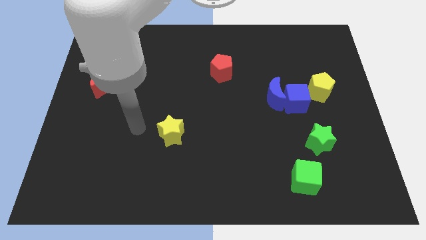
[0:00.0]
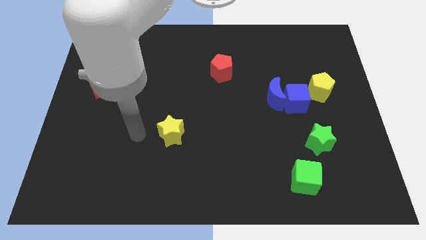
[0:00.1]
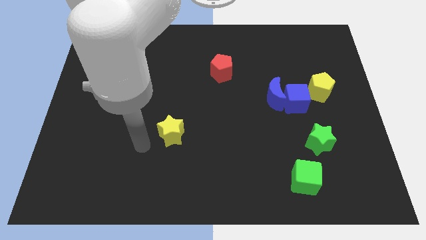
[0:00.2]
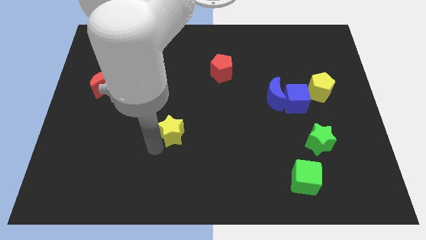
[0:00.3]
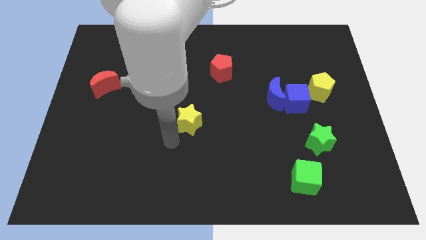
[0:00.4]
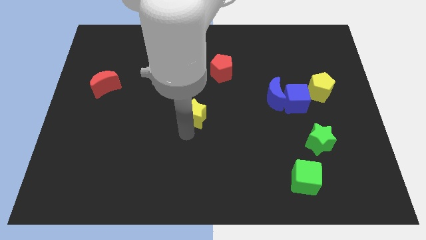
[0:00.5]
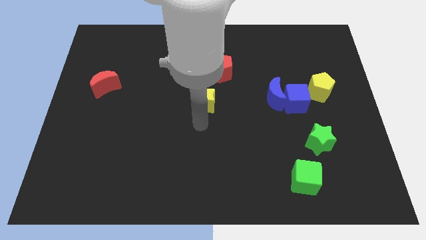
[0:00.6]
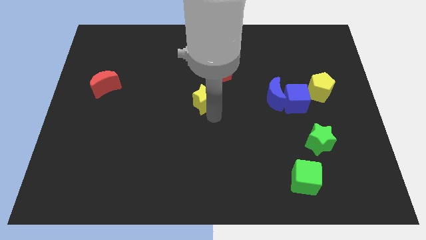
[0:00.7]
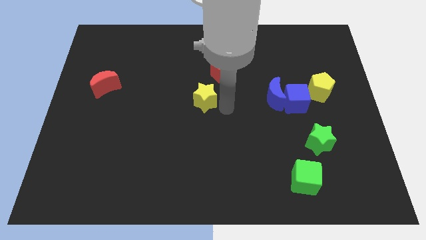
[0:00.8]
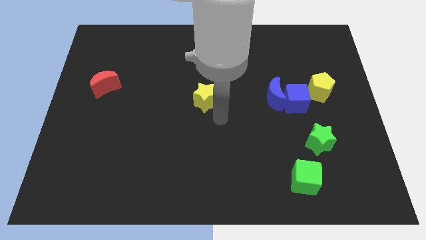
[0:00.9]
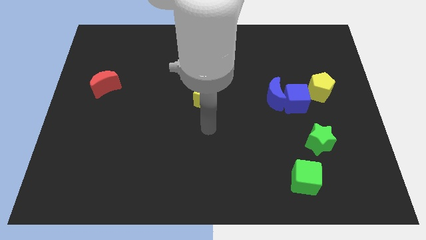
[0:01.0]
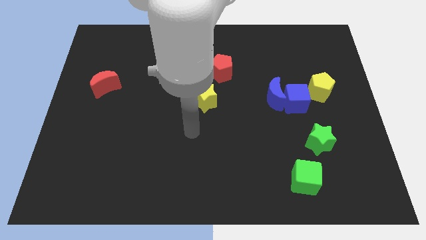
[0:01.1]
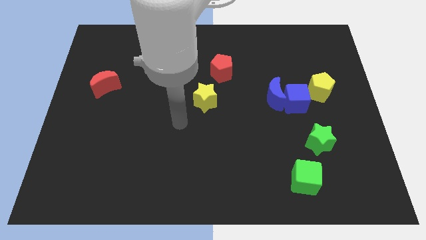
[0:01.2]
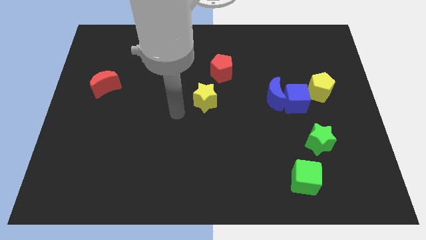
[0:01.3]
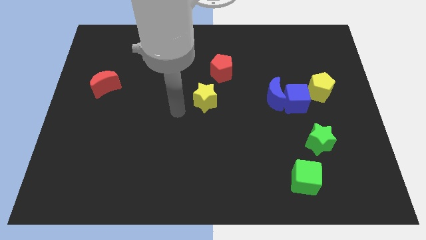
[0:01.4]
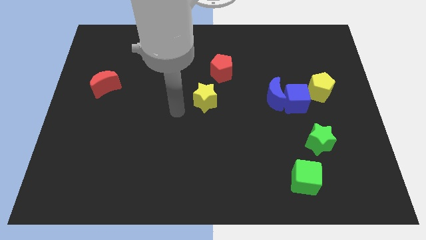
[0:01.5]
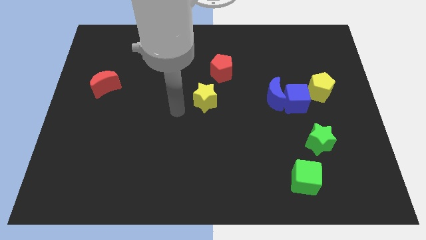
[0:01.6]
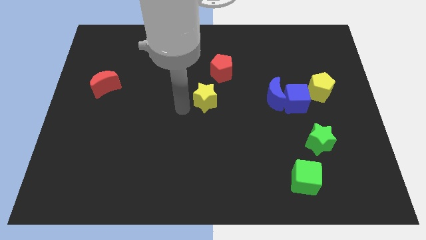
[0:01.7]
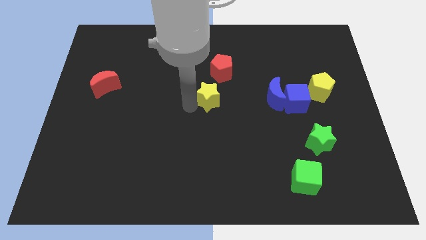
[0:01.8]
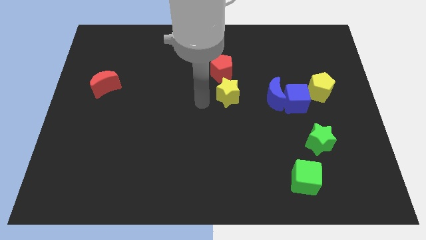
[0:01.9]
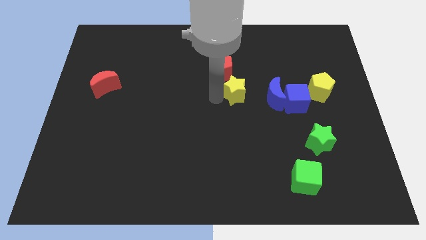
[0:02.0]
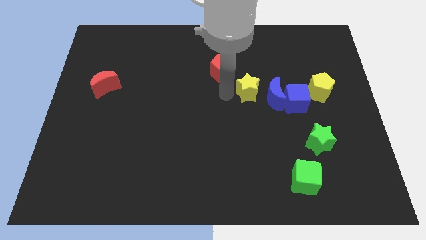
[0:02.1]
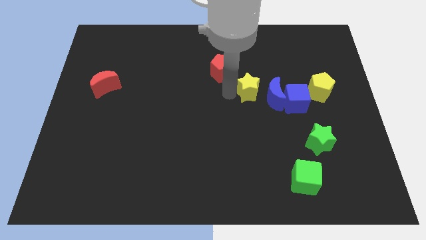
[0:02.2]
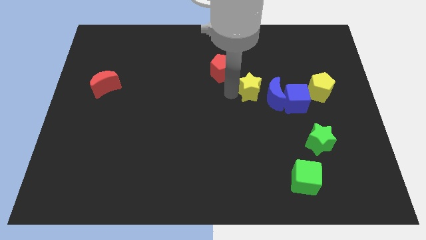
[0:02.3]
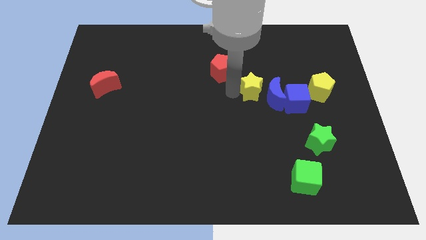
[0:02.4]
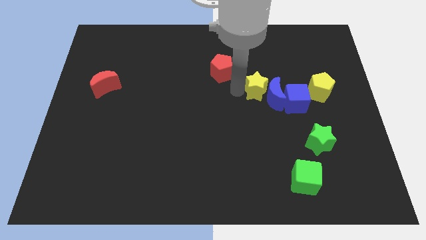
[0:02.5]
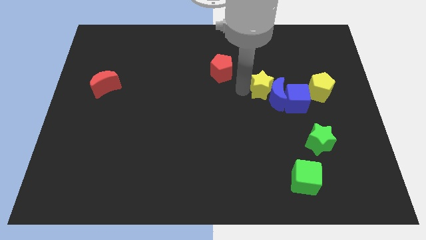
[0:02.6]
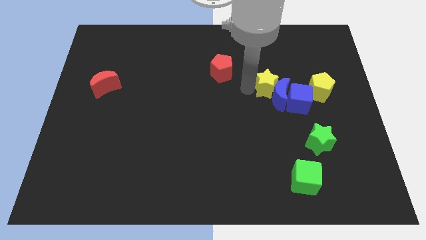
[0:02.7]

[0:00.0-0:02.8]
drag the yellow star to left side of blue moon

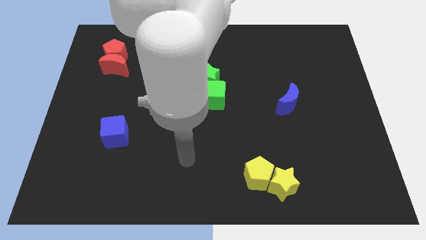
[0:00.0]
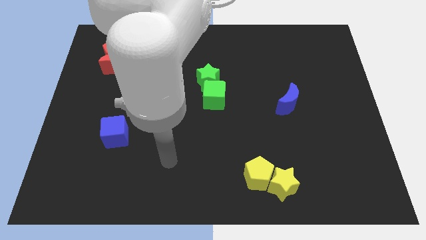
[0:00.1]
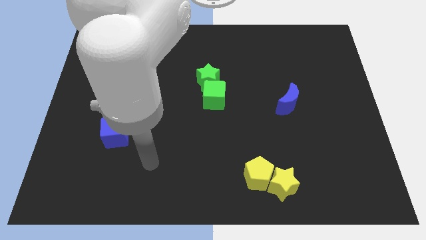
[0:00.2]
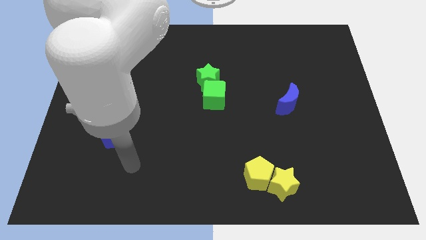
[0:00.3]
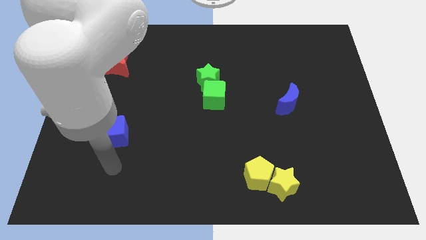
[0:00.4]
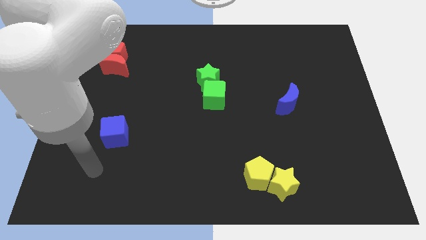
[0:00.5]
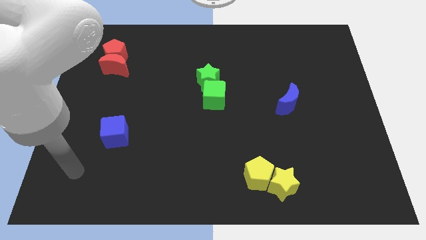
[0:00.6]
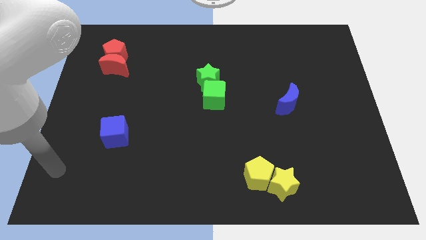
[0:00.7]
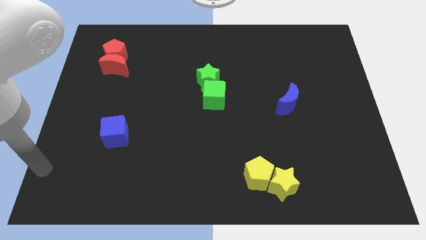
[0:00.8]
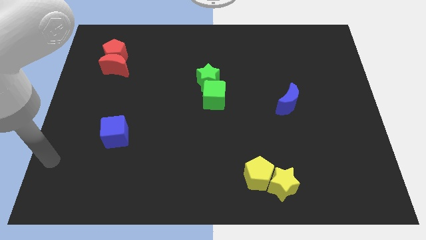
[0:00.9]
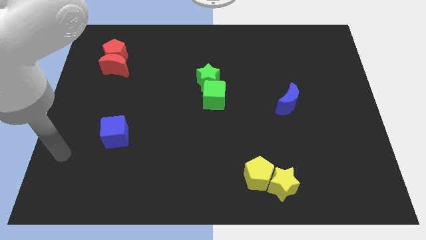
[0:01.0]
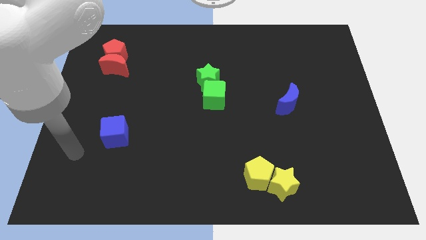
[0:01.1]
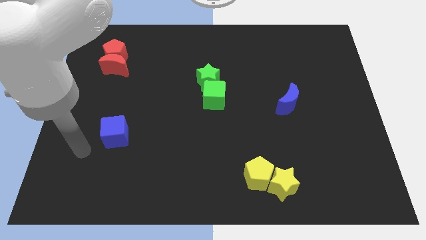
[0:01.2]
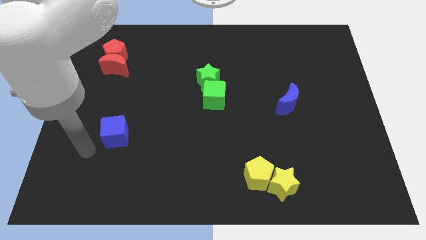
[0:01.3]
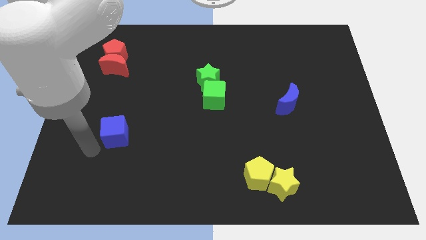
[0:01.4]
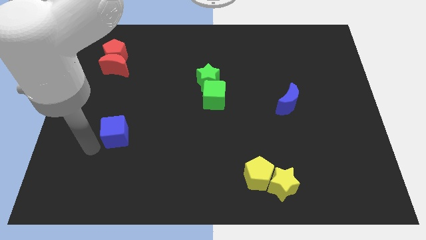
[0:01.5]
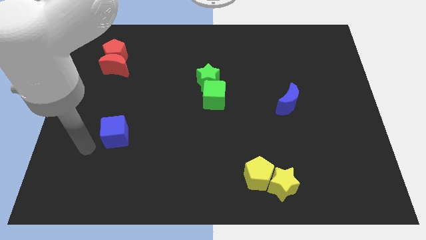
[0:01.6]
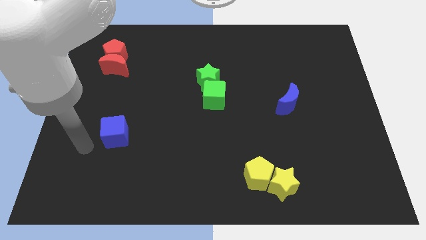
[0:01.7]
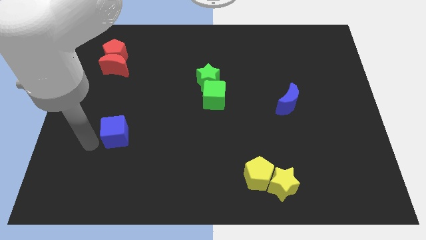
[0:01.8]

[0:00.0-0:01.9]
move arm close to the blue cube

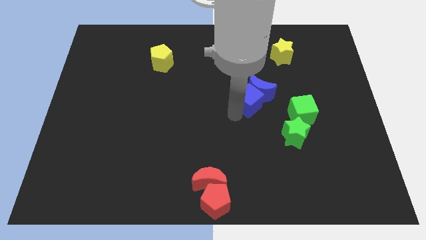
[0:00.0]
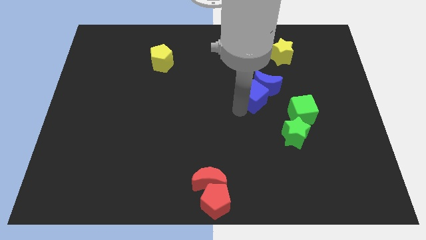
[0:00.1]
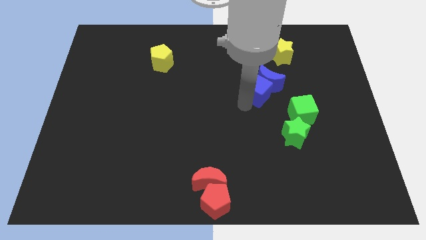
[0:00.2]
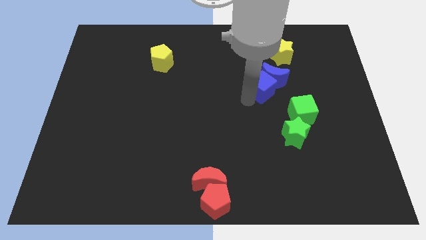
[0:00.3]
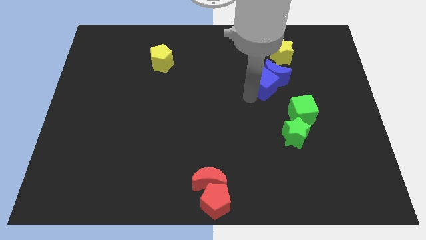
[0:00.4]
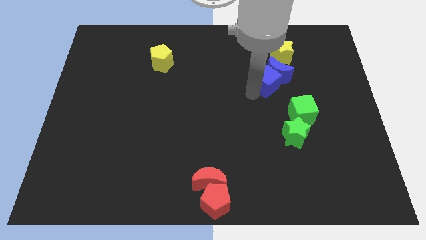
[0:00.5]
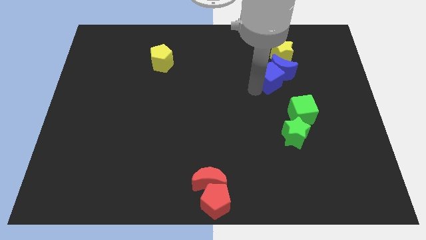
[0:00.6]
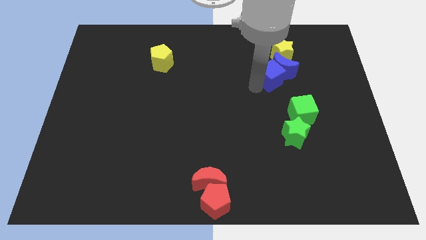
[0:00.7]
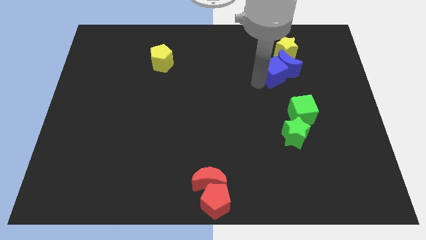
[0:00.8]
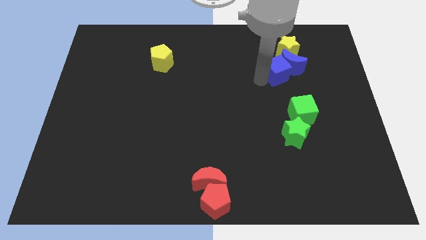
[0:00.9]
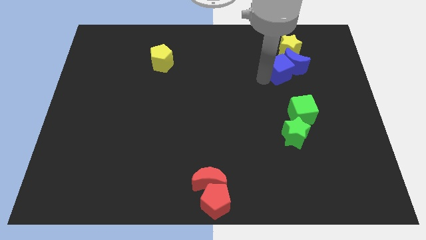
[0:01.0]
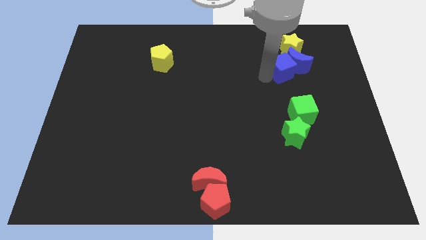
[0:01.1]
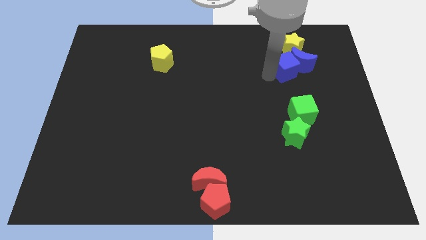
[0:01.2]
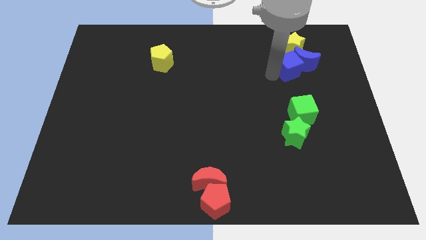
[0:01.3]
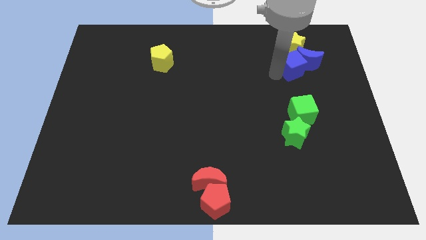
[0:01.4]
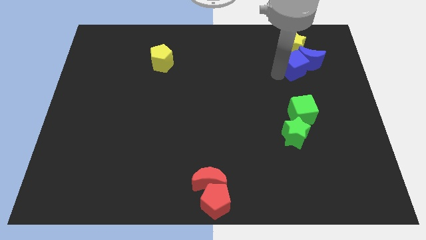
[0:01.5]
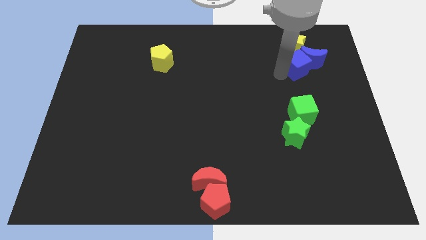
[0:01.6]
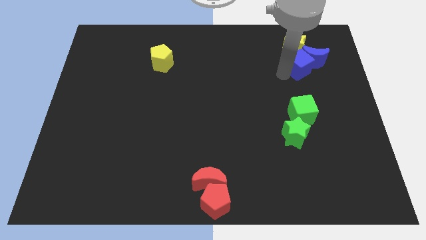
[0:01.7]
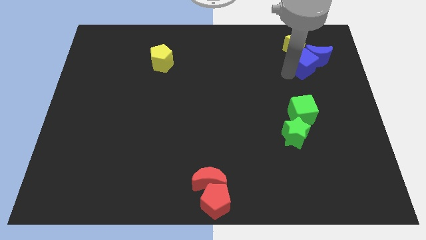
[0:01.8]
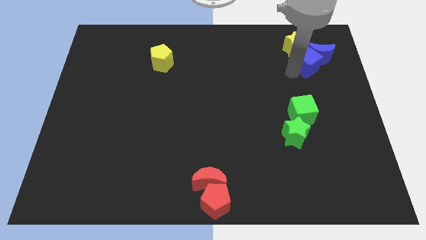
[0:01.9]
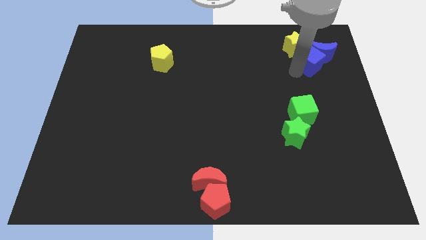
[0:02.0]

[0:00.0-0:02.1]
move the blue cube along with blue crescent to the top right corner of the board

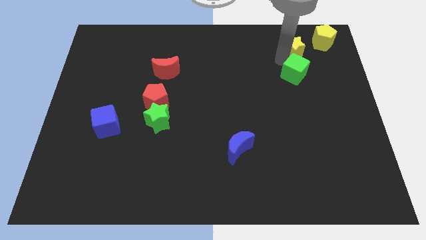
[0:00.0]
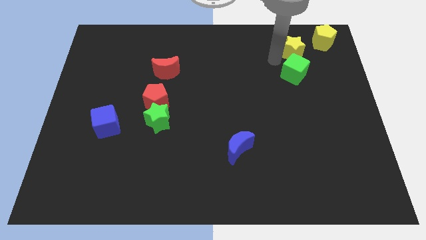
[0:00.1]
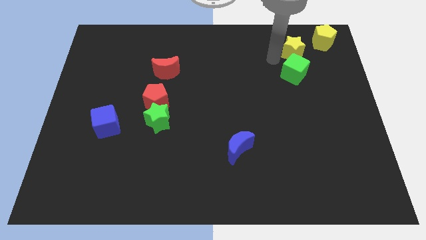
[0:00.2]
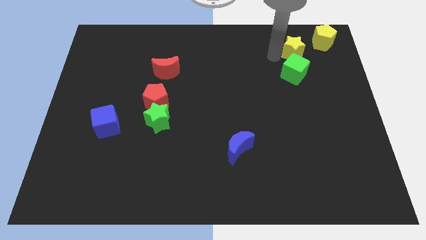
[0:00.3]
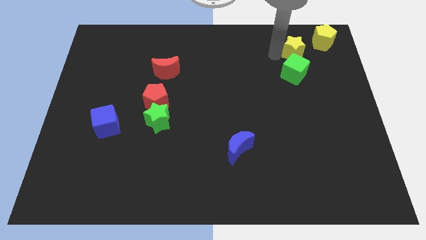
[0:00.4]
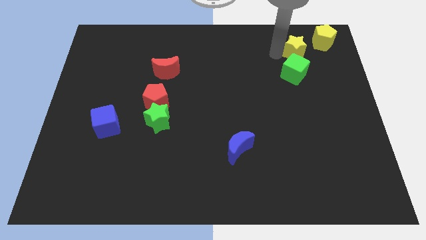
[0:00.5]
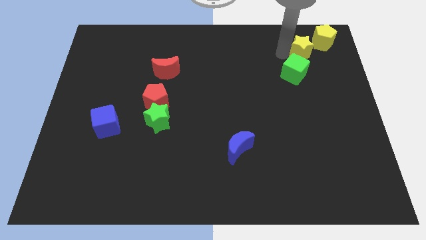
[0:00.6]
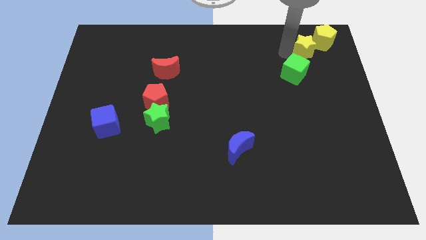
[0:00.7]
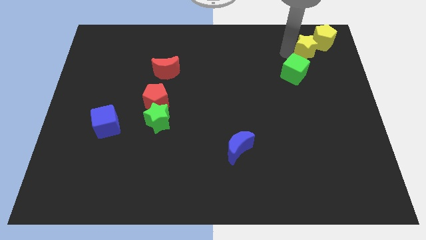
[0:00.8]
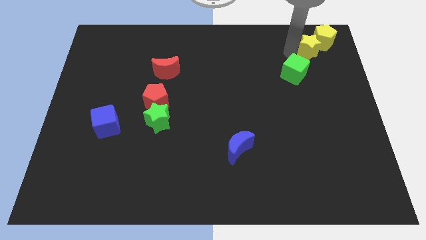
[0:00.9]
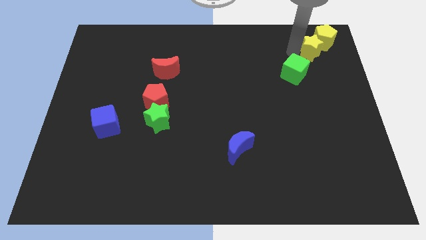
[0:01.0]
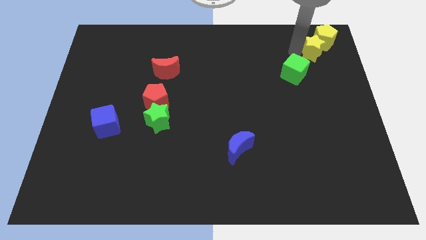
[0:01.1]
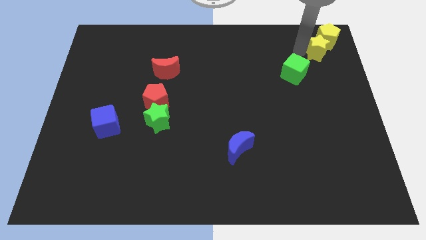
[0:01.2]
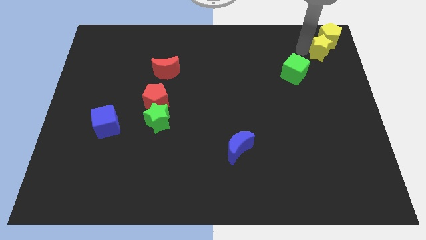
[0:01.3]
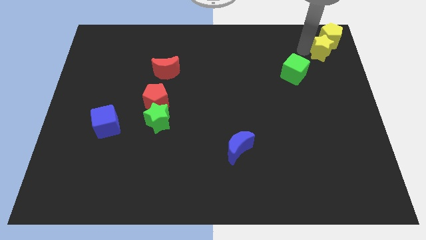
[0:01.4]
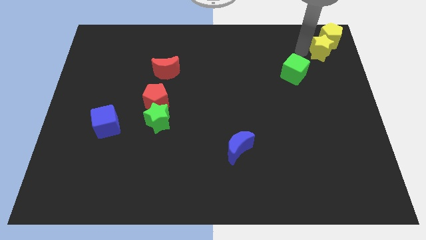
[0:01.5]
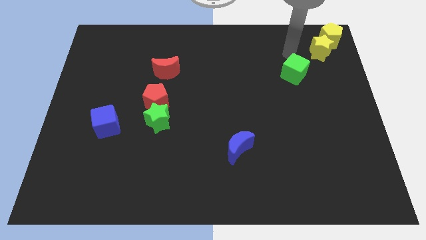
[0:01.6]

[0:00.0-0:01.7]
separate yellow star from the green cube

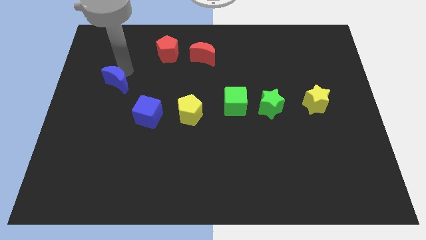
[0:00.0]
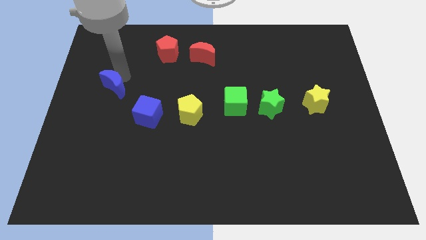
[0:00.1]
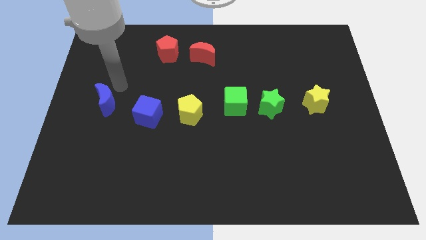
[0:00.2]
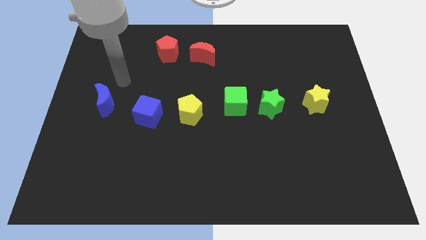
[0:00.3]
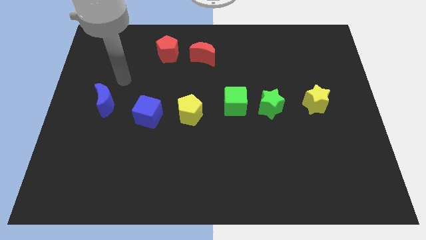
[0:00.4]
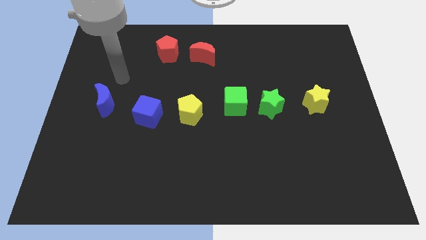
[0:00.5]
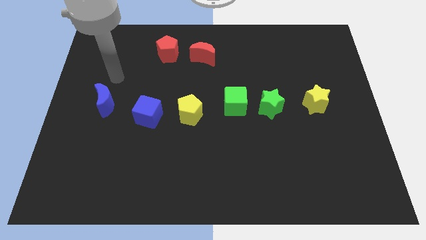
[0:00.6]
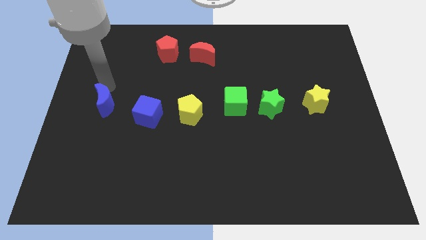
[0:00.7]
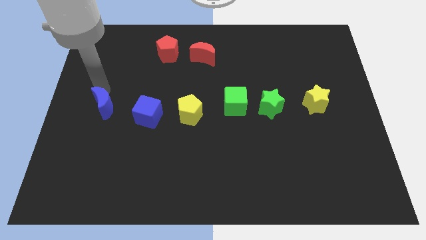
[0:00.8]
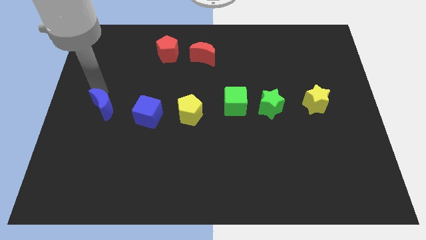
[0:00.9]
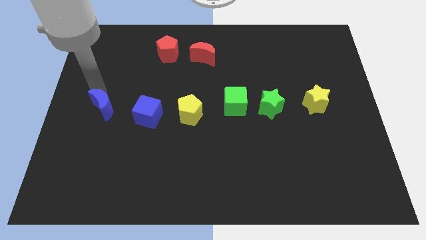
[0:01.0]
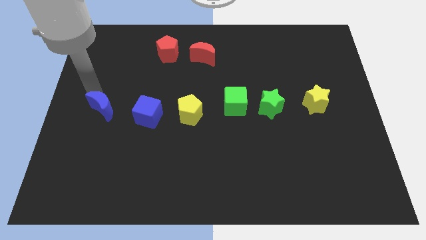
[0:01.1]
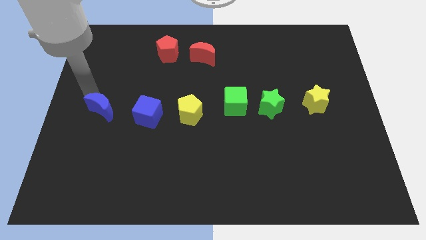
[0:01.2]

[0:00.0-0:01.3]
place the blue crescent at left side of the blue cube
